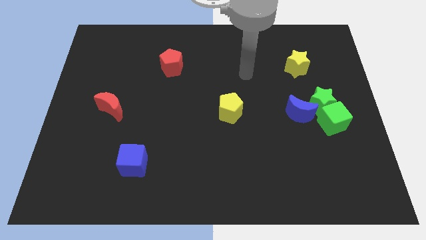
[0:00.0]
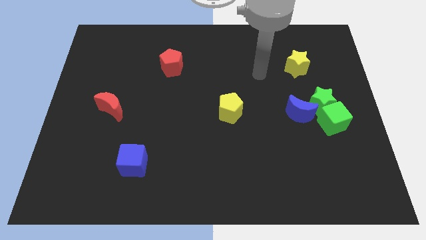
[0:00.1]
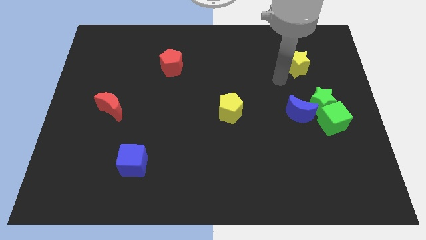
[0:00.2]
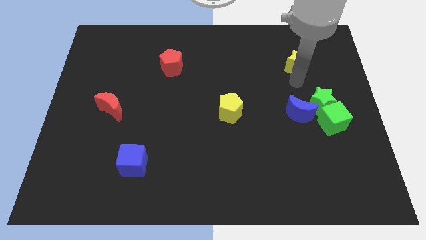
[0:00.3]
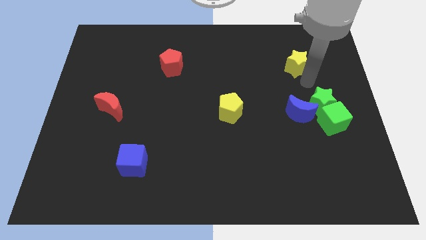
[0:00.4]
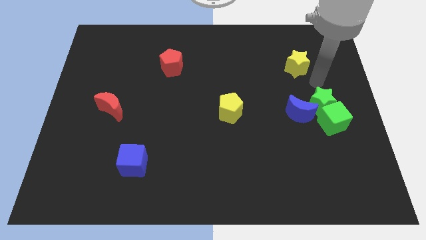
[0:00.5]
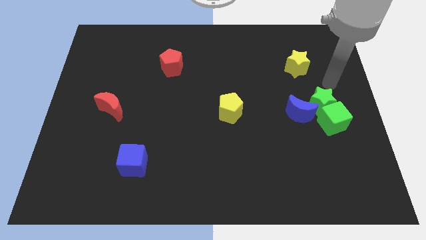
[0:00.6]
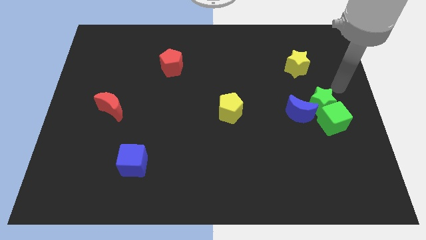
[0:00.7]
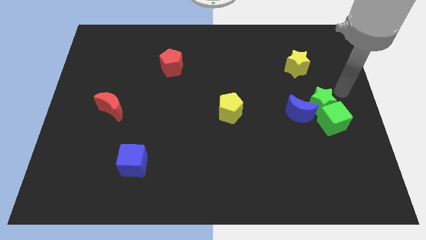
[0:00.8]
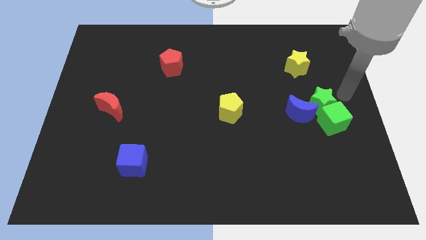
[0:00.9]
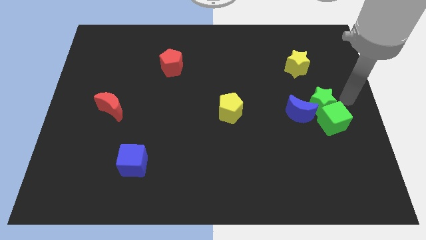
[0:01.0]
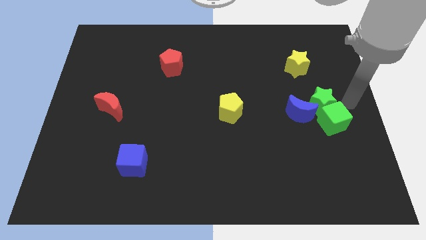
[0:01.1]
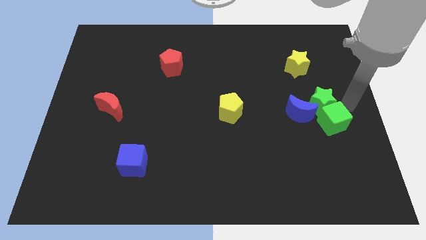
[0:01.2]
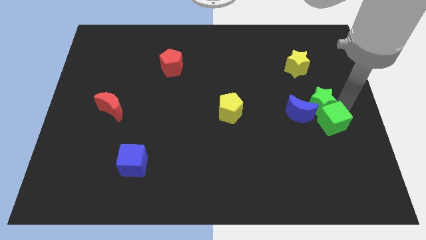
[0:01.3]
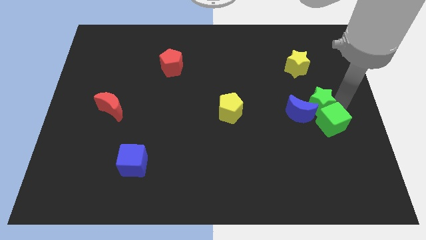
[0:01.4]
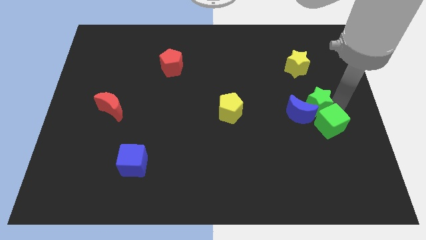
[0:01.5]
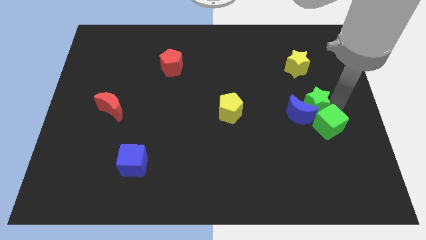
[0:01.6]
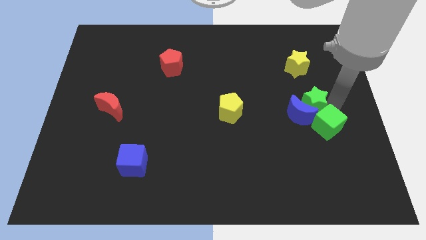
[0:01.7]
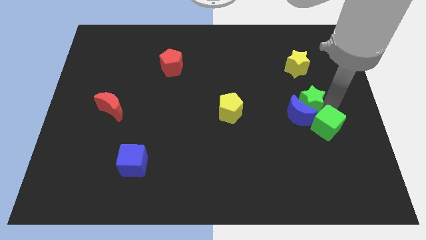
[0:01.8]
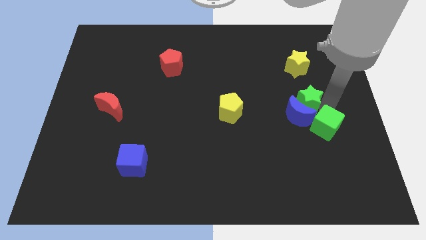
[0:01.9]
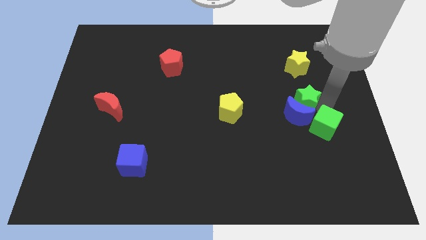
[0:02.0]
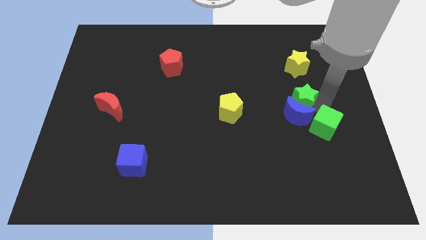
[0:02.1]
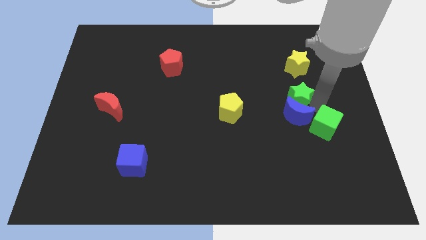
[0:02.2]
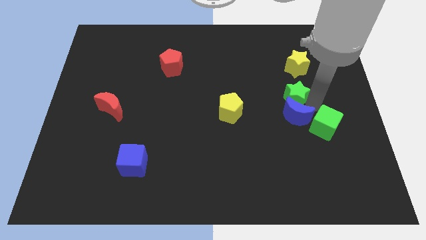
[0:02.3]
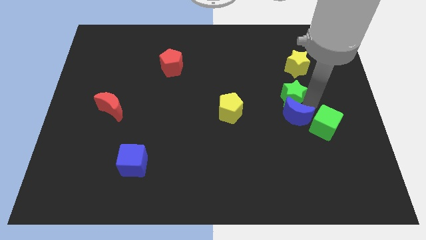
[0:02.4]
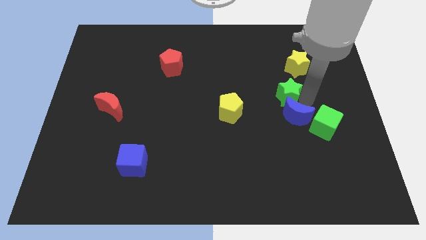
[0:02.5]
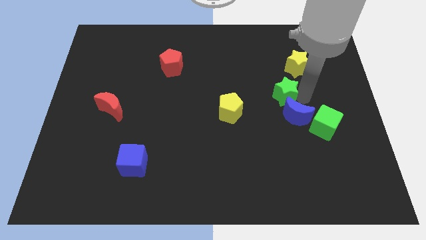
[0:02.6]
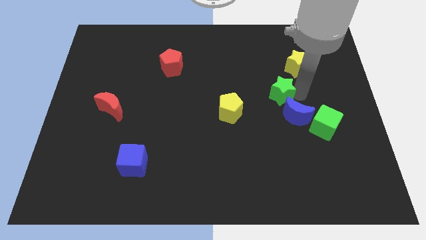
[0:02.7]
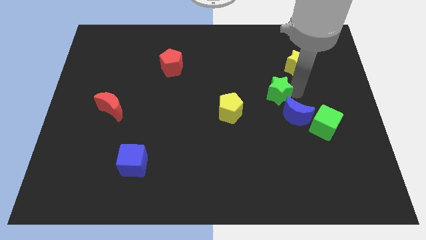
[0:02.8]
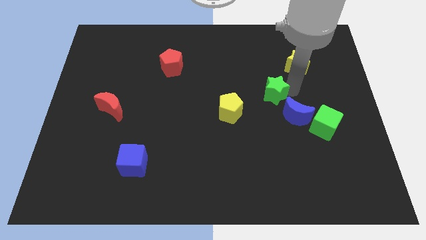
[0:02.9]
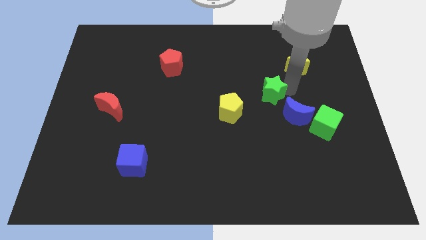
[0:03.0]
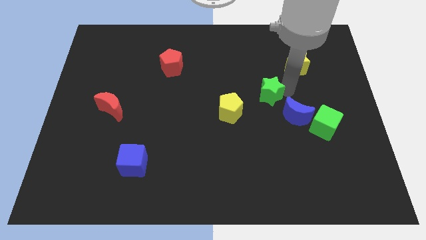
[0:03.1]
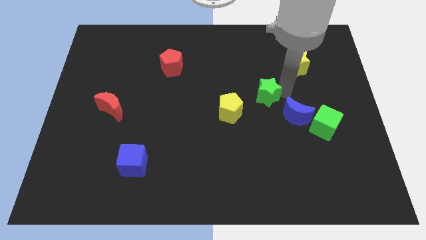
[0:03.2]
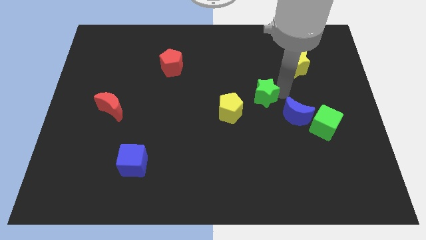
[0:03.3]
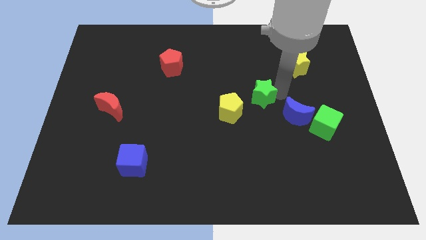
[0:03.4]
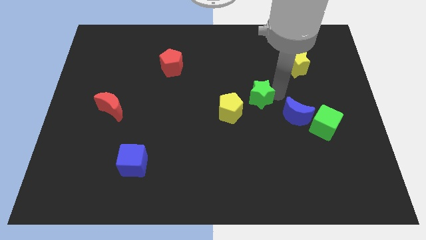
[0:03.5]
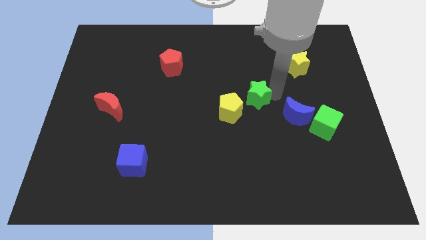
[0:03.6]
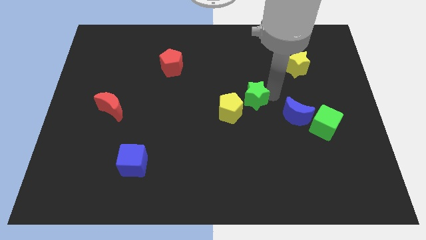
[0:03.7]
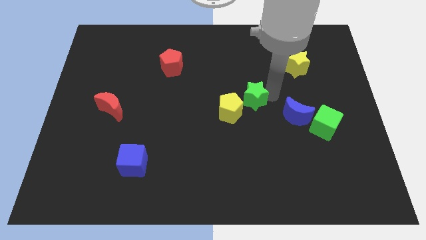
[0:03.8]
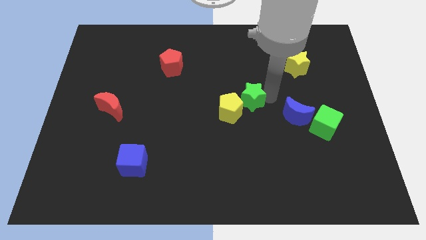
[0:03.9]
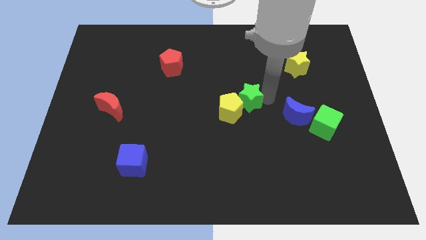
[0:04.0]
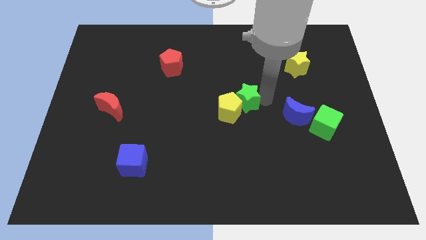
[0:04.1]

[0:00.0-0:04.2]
put the green star next to the yellow pentagon

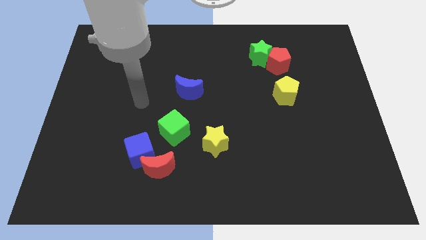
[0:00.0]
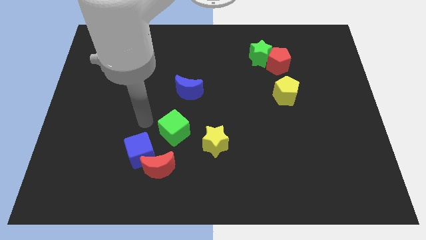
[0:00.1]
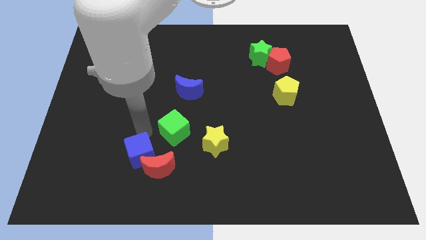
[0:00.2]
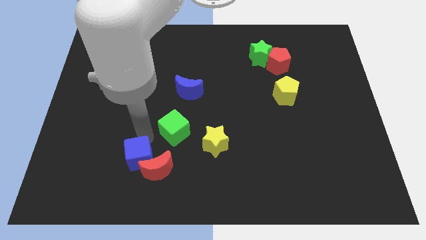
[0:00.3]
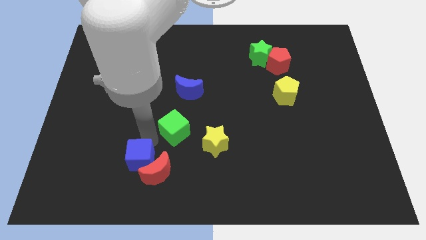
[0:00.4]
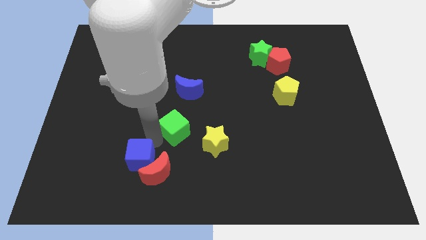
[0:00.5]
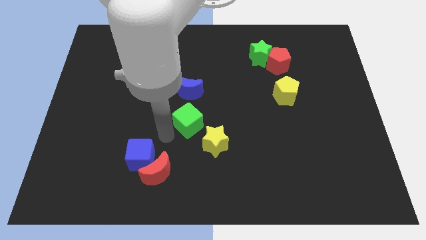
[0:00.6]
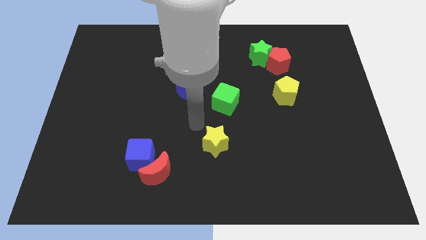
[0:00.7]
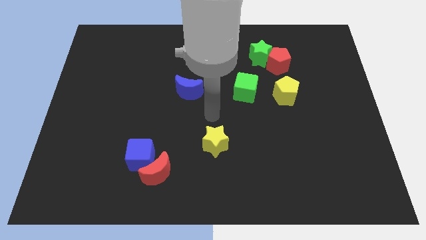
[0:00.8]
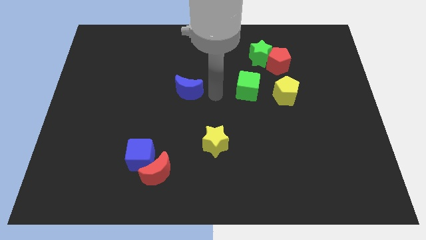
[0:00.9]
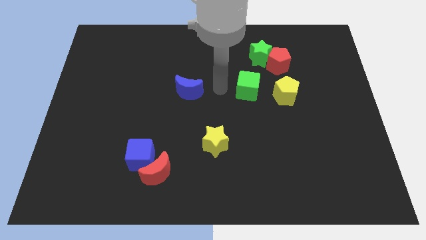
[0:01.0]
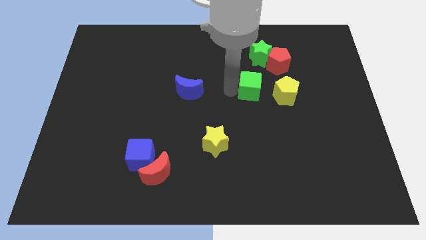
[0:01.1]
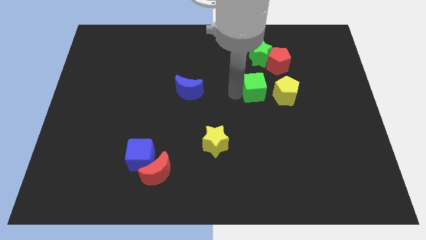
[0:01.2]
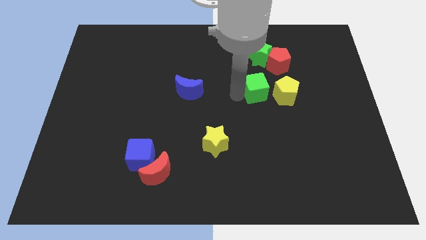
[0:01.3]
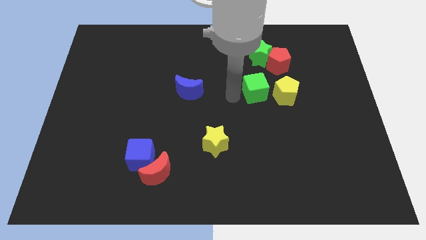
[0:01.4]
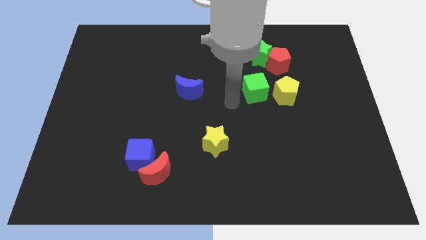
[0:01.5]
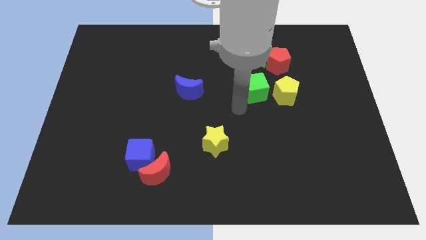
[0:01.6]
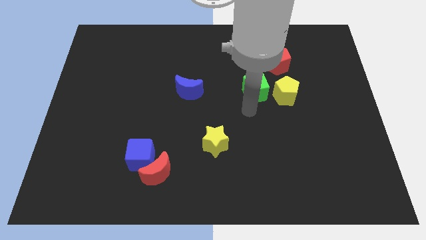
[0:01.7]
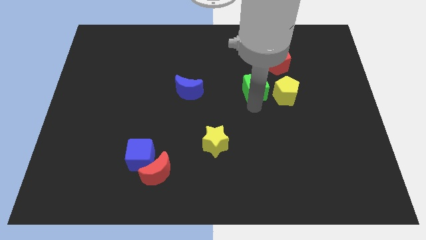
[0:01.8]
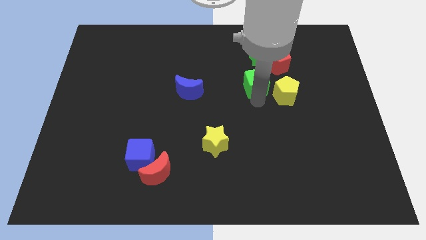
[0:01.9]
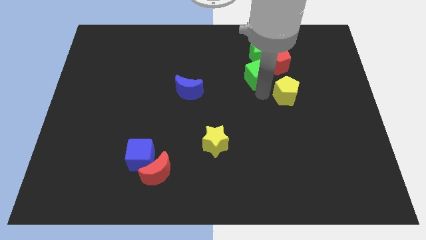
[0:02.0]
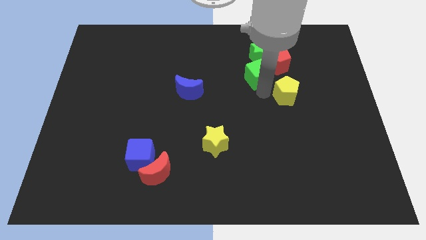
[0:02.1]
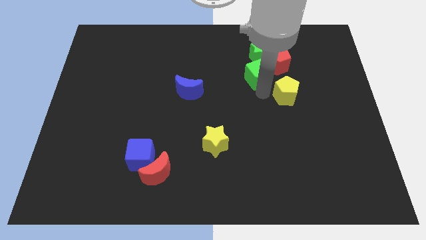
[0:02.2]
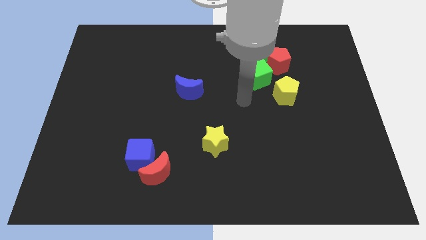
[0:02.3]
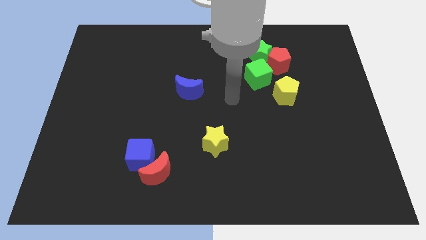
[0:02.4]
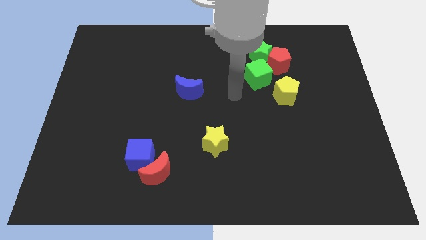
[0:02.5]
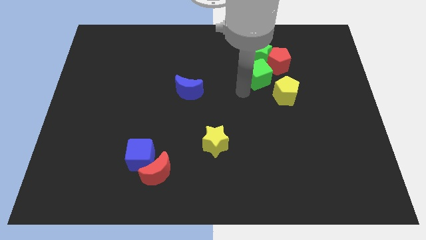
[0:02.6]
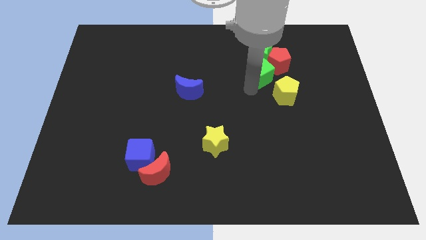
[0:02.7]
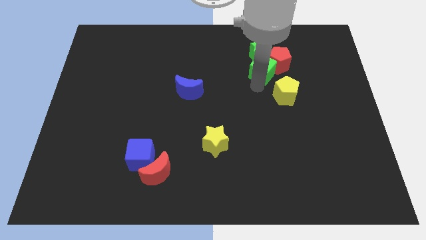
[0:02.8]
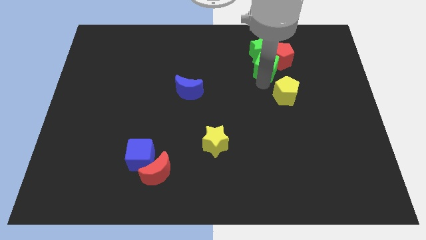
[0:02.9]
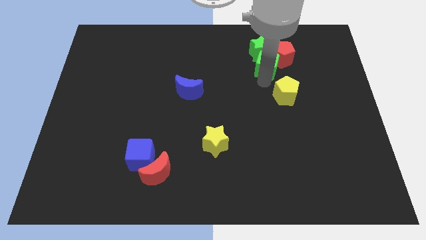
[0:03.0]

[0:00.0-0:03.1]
put the green cube close to the red pentagon

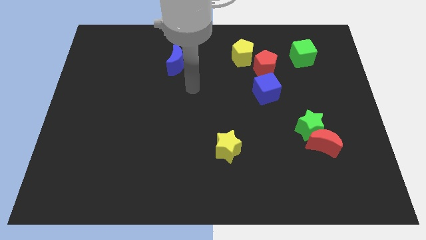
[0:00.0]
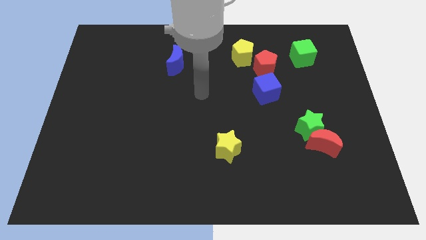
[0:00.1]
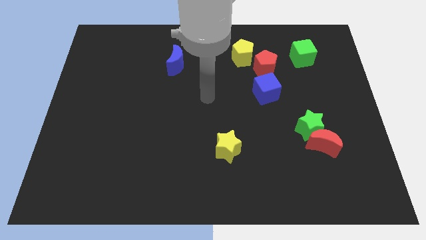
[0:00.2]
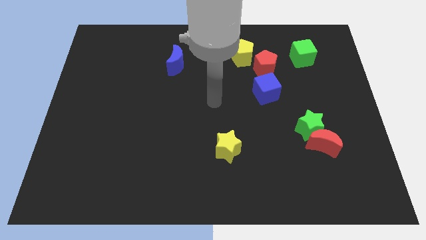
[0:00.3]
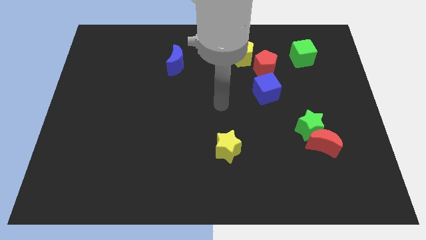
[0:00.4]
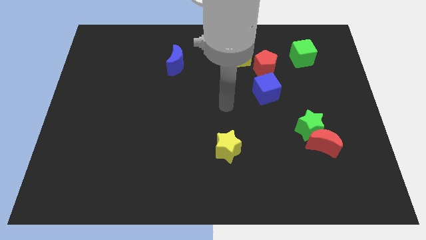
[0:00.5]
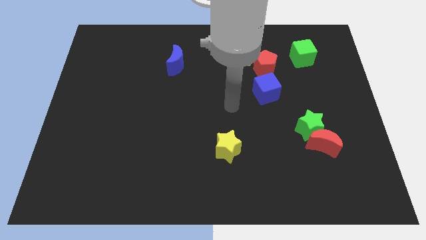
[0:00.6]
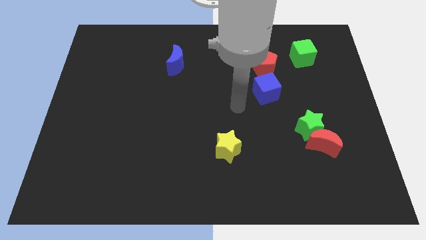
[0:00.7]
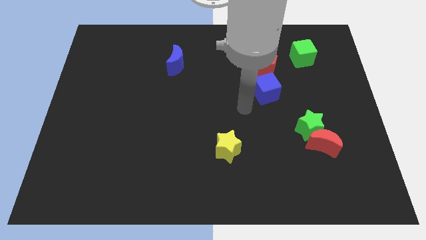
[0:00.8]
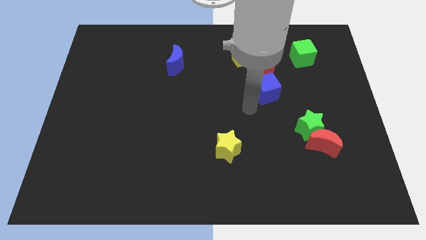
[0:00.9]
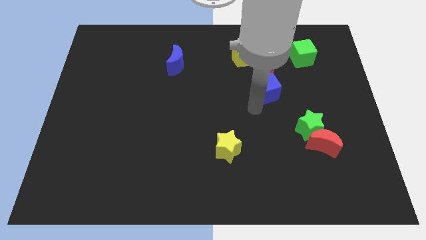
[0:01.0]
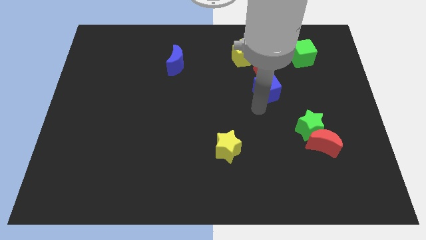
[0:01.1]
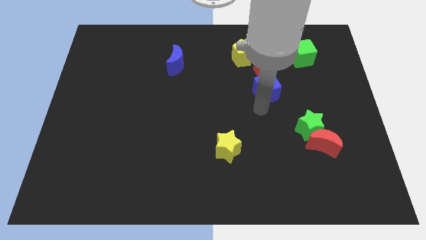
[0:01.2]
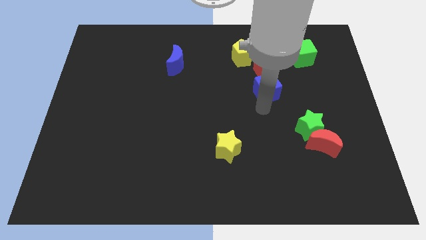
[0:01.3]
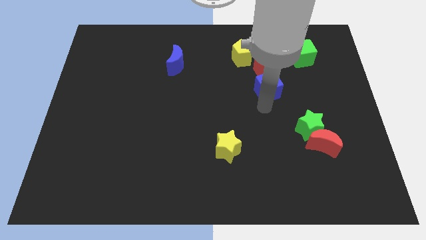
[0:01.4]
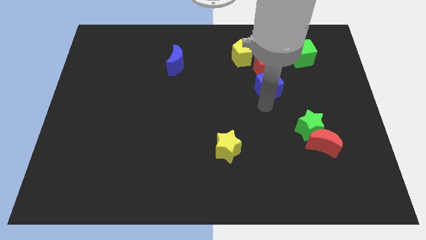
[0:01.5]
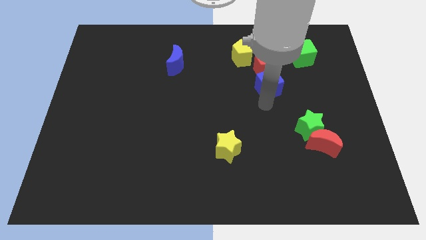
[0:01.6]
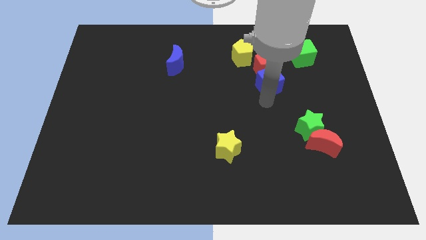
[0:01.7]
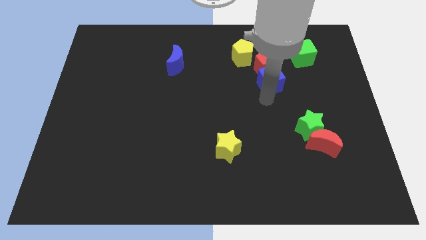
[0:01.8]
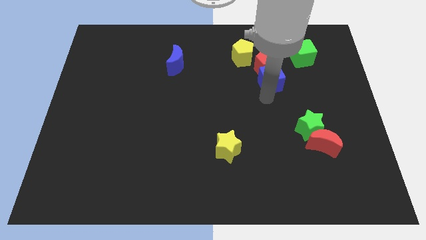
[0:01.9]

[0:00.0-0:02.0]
put the blue cube to the red pentagon
